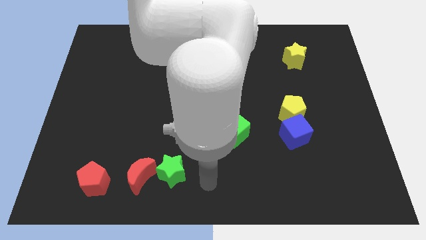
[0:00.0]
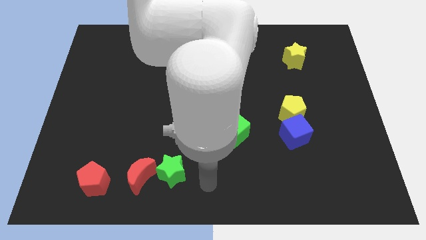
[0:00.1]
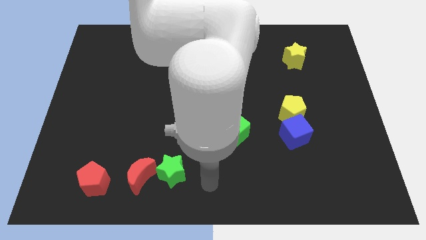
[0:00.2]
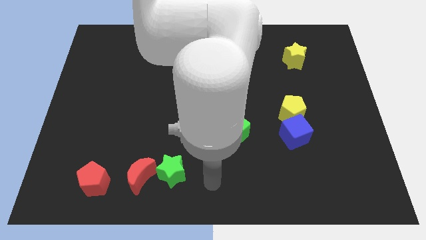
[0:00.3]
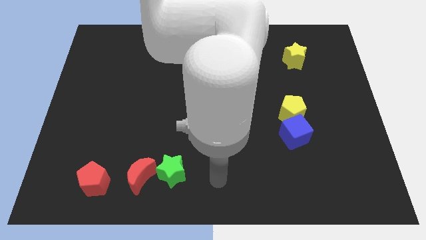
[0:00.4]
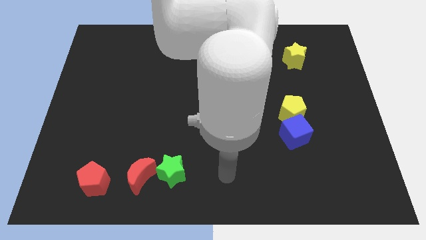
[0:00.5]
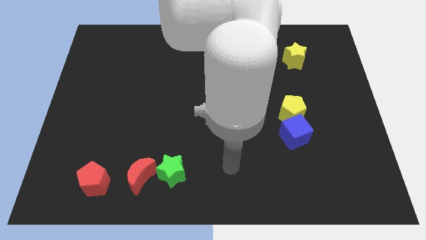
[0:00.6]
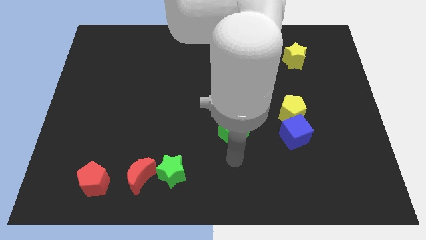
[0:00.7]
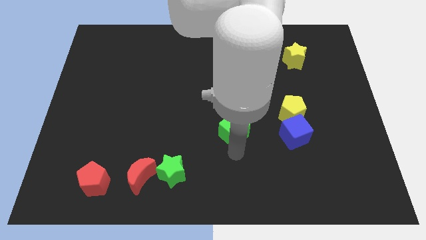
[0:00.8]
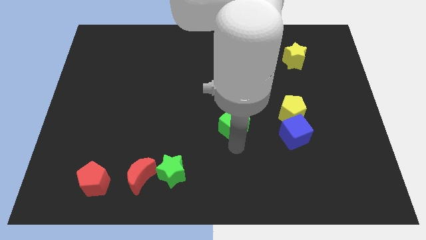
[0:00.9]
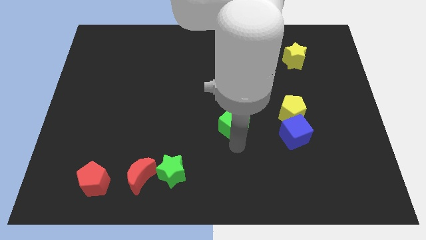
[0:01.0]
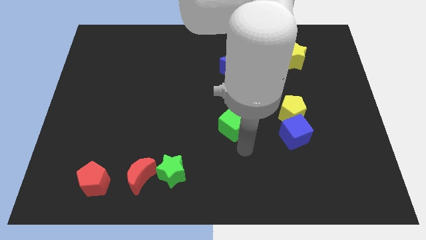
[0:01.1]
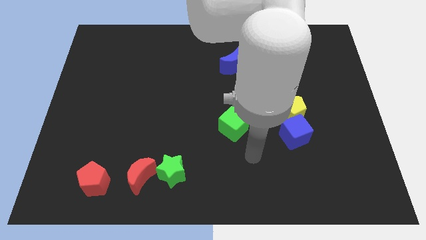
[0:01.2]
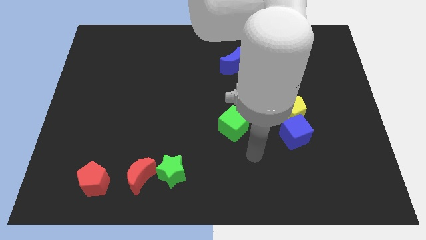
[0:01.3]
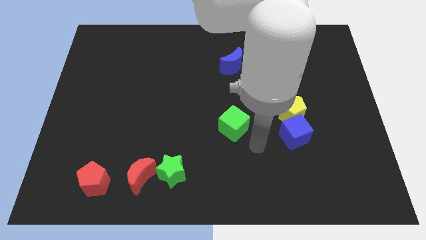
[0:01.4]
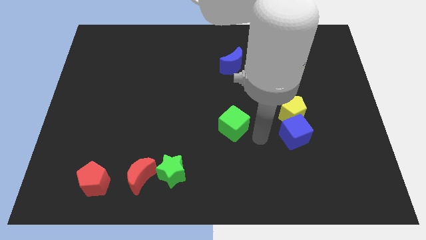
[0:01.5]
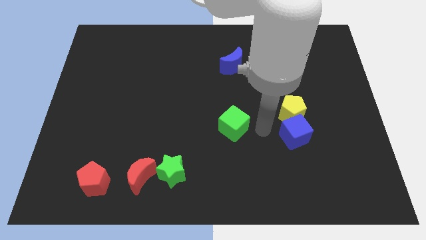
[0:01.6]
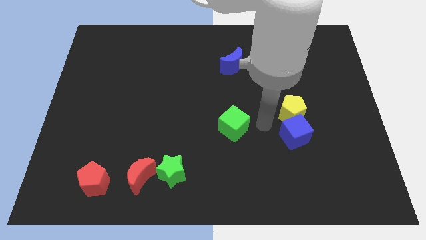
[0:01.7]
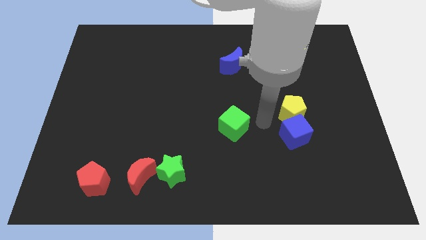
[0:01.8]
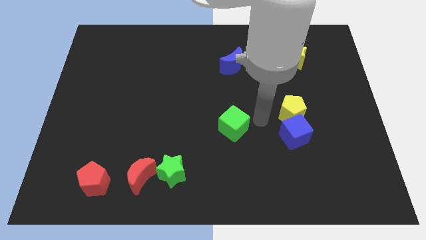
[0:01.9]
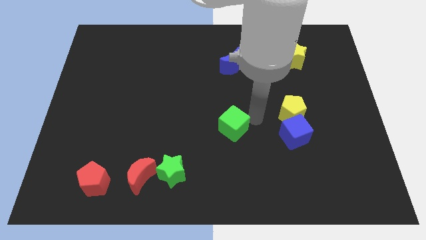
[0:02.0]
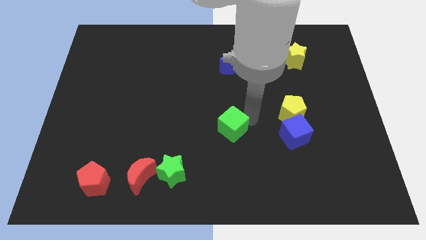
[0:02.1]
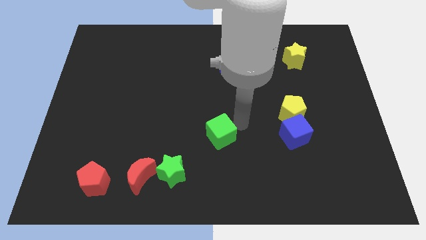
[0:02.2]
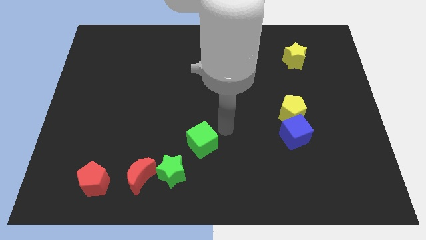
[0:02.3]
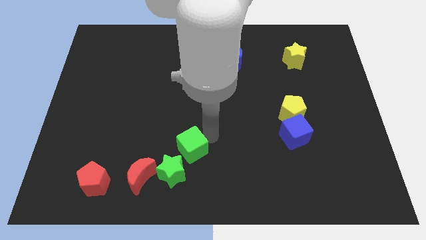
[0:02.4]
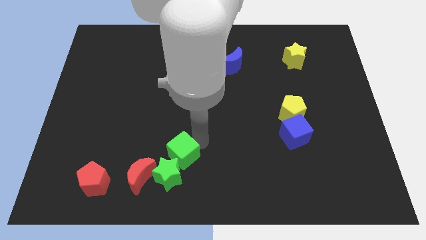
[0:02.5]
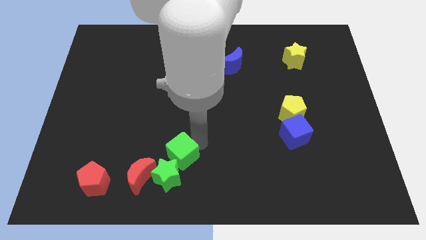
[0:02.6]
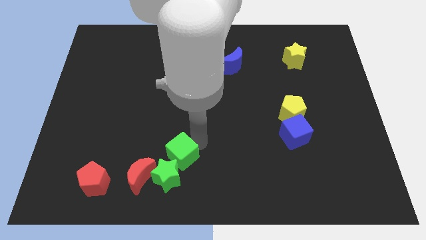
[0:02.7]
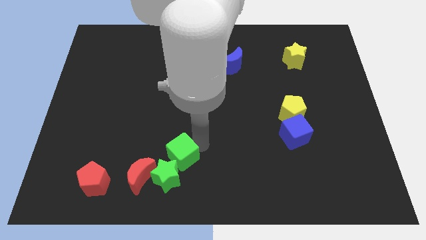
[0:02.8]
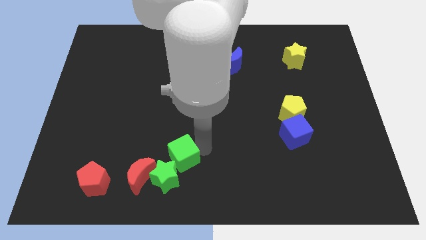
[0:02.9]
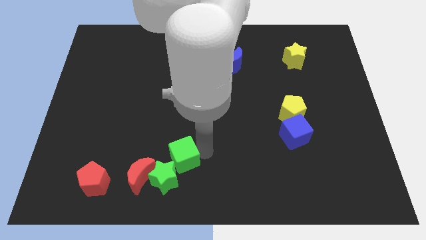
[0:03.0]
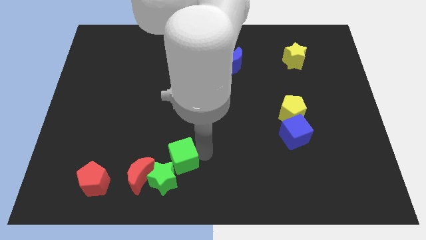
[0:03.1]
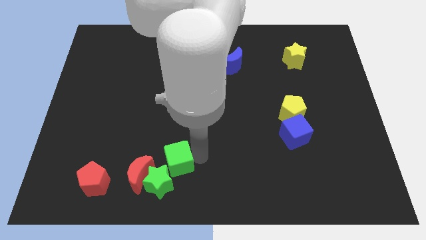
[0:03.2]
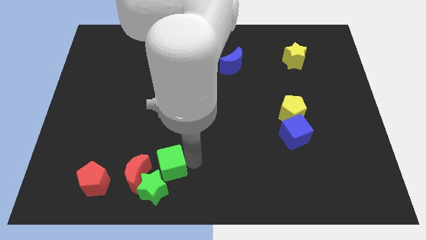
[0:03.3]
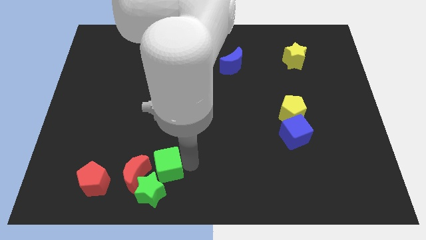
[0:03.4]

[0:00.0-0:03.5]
slide the green cube diagonally bottom left to the blue moon

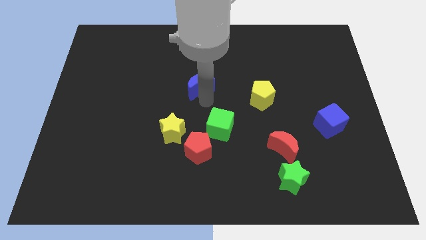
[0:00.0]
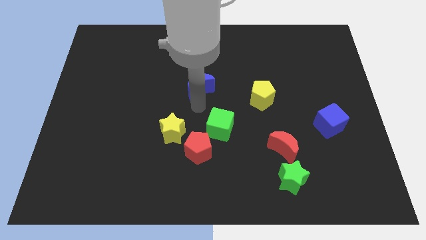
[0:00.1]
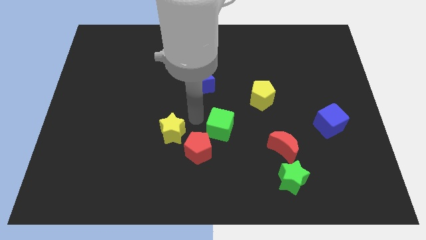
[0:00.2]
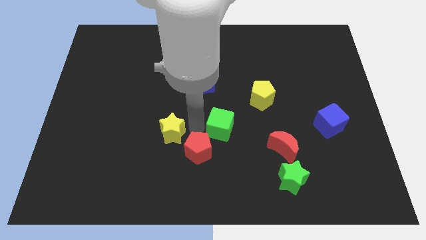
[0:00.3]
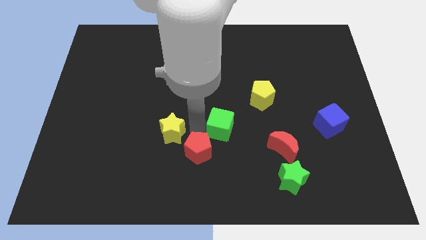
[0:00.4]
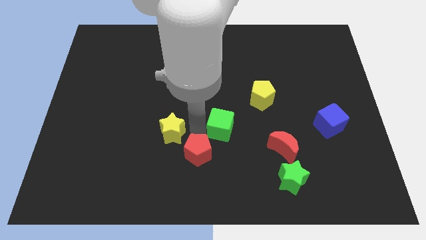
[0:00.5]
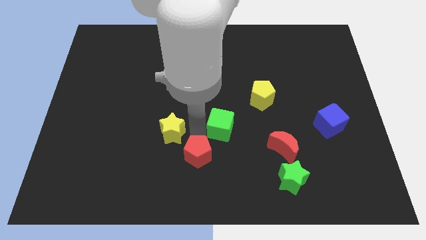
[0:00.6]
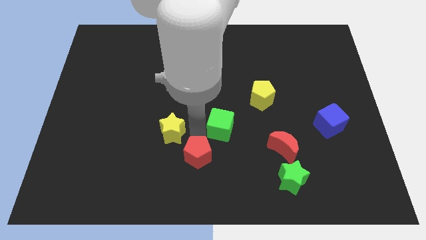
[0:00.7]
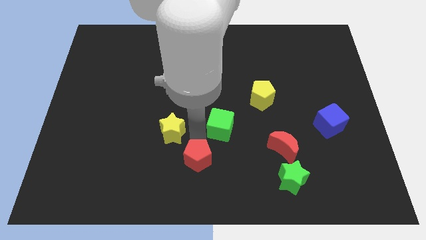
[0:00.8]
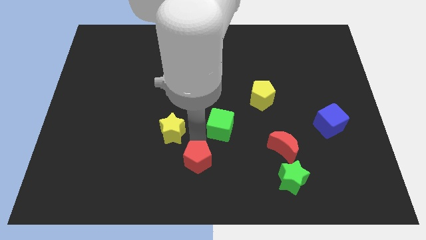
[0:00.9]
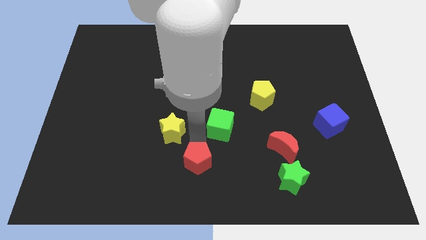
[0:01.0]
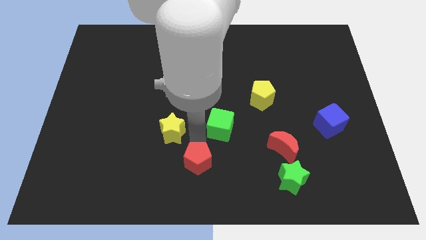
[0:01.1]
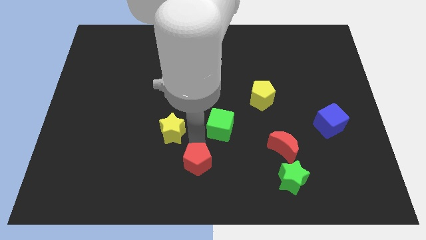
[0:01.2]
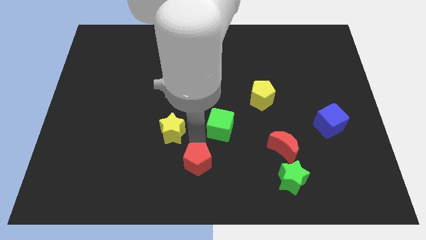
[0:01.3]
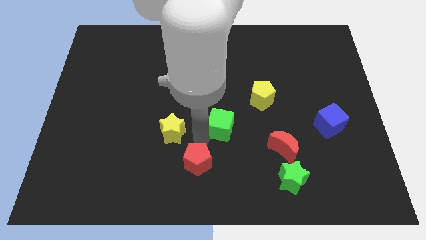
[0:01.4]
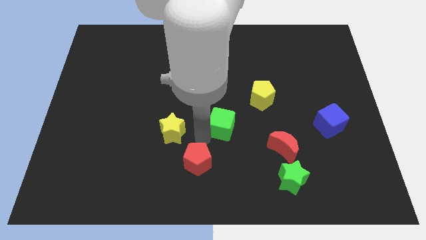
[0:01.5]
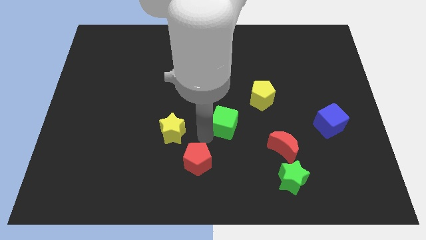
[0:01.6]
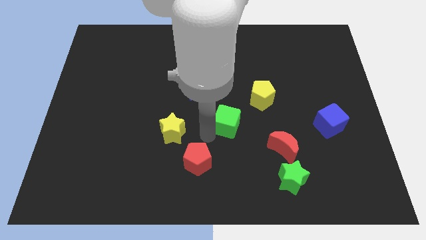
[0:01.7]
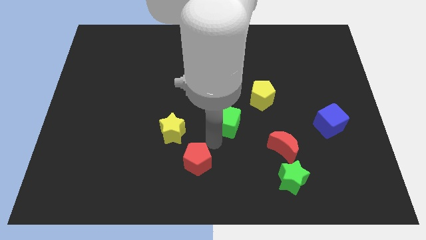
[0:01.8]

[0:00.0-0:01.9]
move the red pentagon and the green cube away from each other

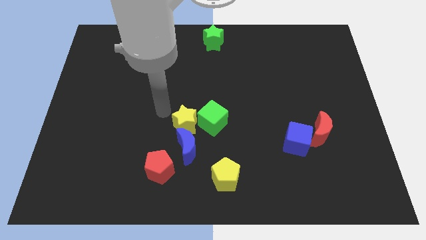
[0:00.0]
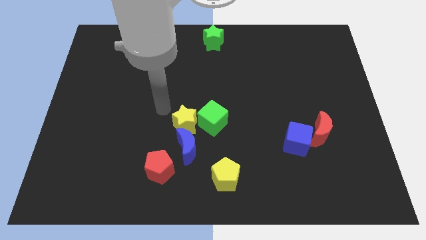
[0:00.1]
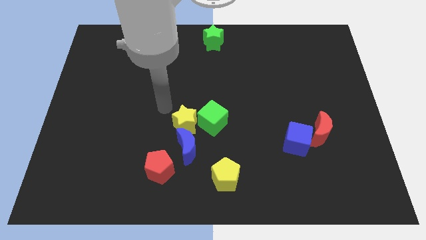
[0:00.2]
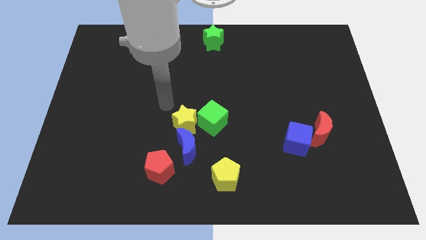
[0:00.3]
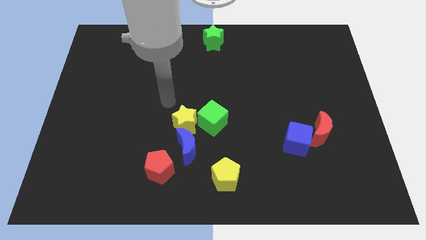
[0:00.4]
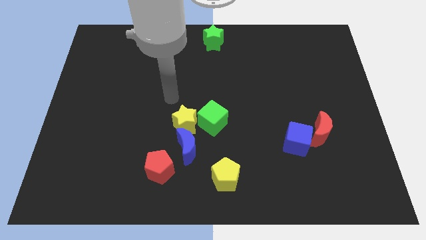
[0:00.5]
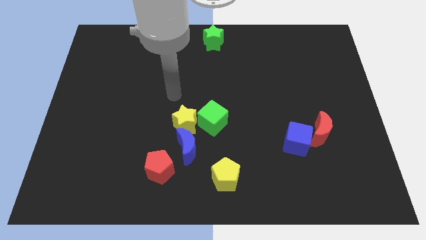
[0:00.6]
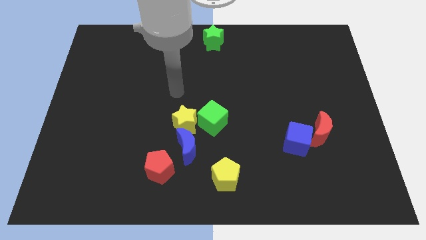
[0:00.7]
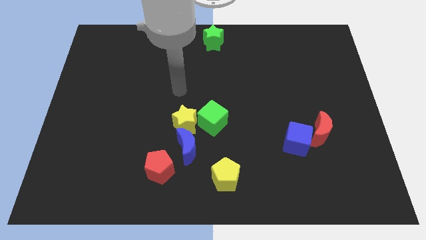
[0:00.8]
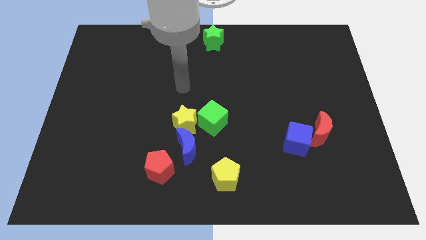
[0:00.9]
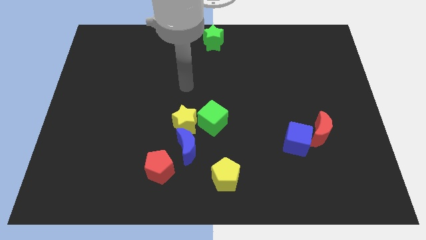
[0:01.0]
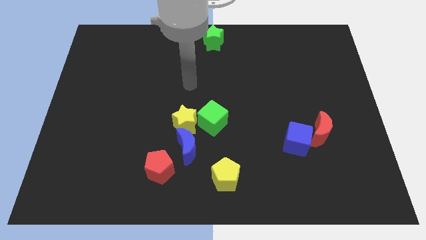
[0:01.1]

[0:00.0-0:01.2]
move the arm away from the yellow star

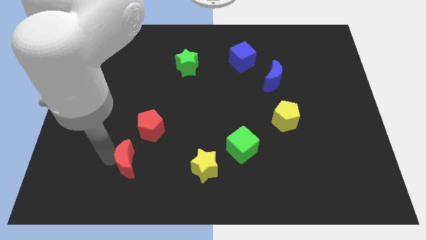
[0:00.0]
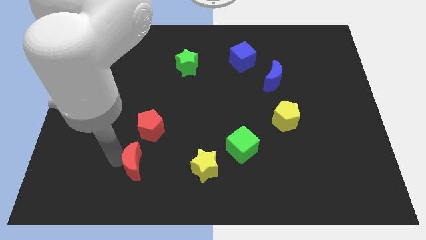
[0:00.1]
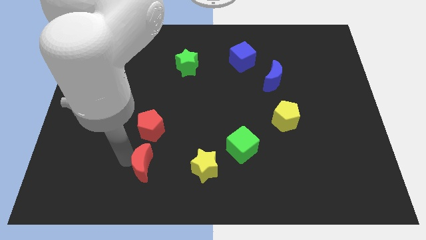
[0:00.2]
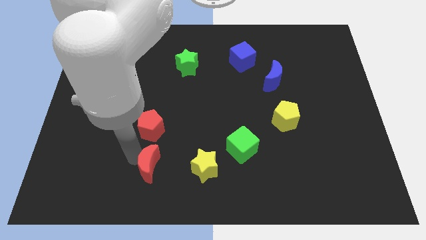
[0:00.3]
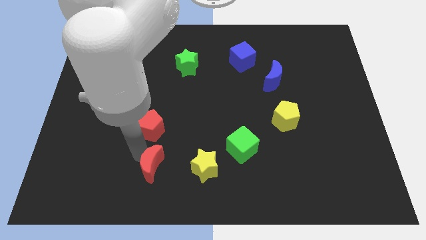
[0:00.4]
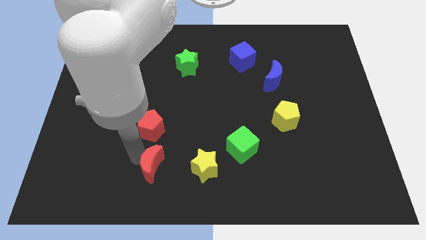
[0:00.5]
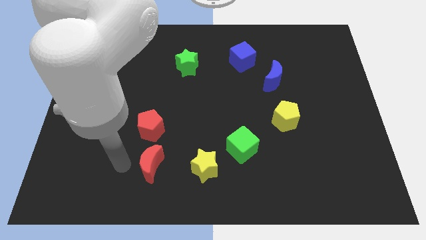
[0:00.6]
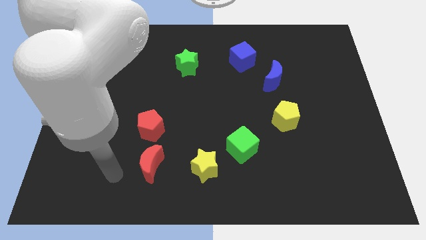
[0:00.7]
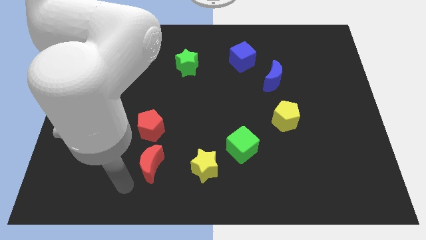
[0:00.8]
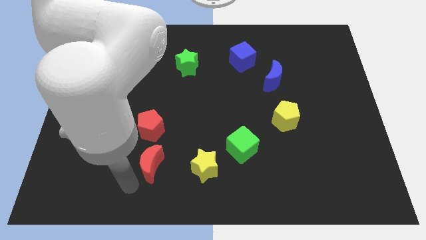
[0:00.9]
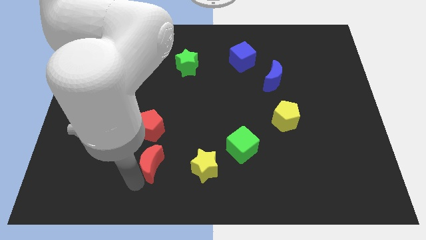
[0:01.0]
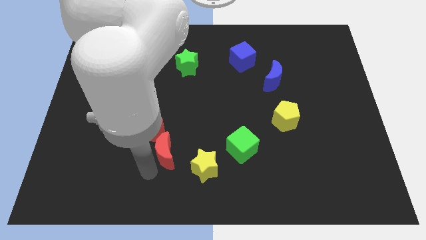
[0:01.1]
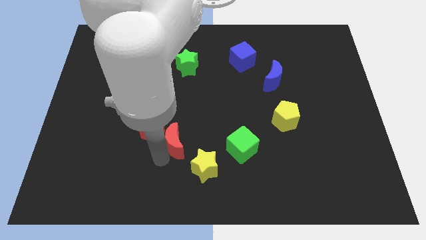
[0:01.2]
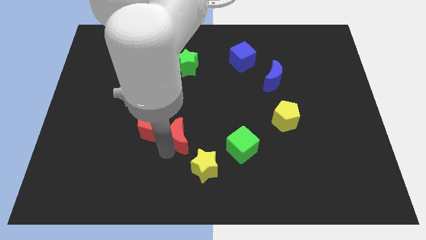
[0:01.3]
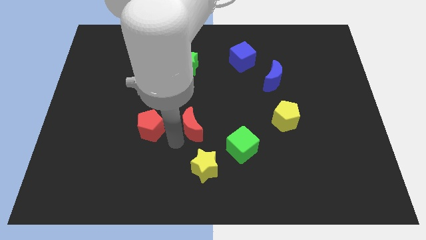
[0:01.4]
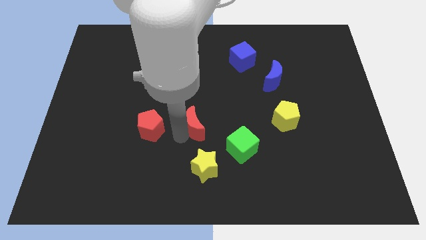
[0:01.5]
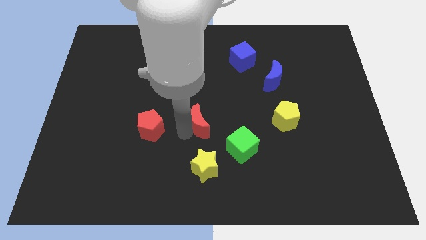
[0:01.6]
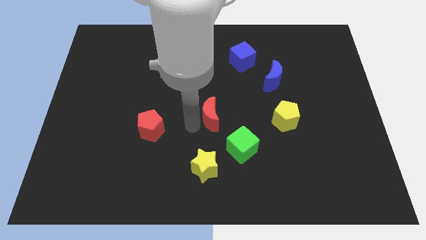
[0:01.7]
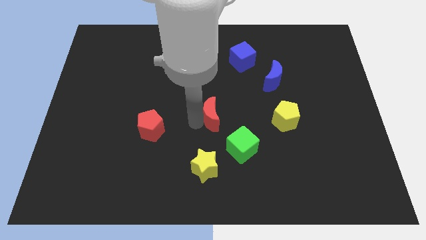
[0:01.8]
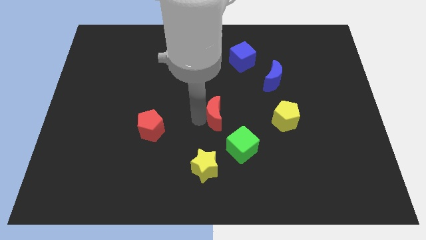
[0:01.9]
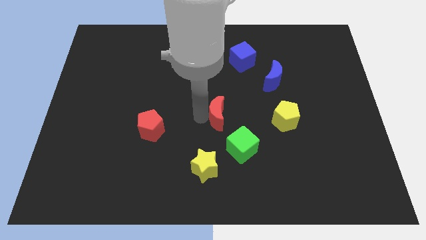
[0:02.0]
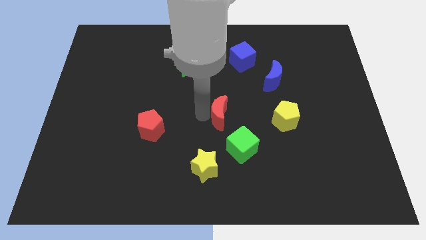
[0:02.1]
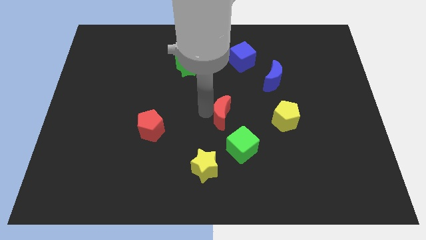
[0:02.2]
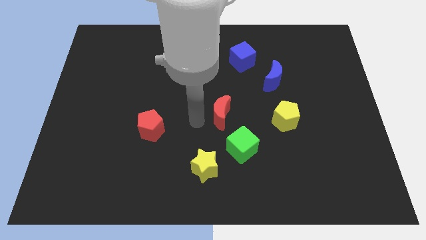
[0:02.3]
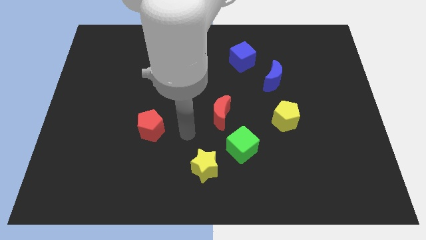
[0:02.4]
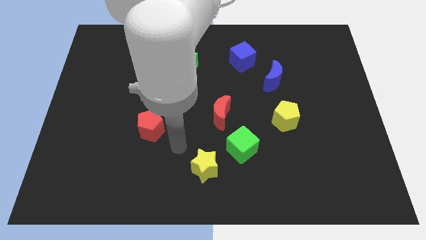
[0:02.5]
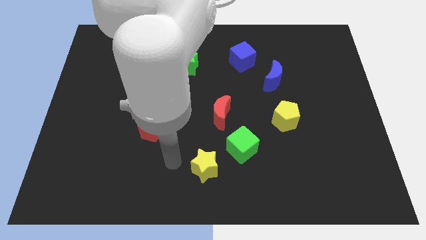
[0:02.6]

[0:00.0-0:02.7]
place the red crescent to the left of the yellow pentagon
